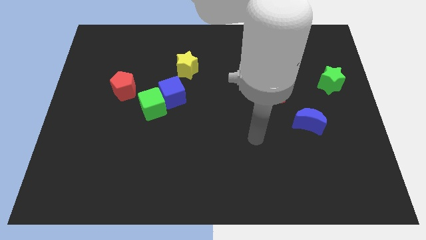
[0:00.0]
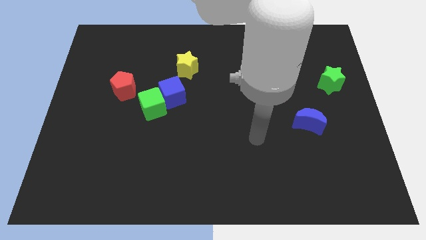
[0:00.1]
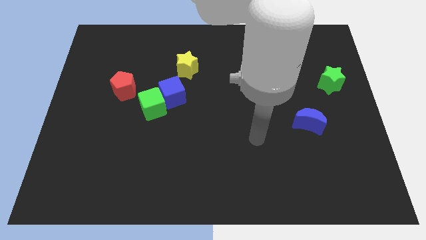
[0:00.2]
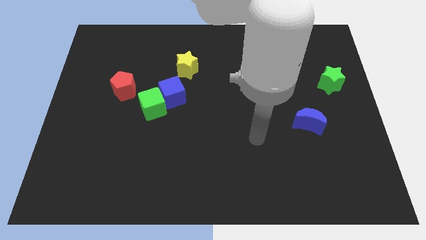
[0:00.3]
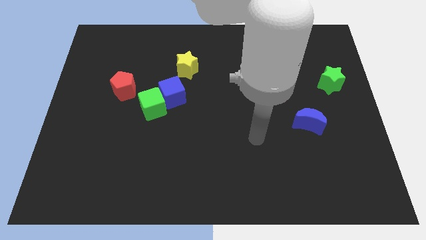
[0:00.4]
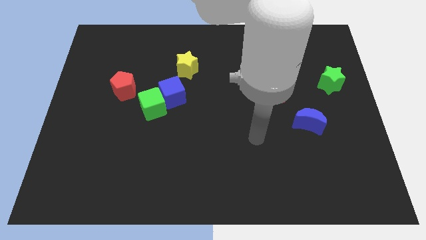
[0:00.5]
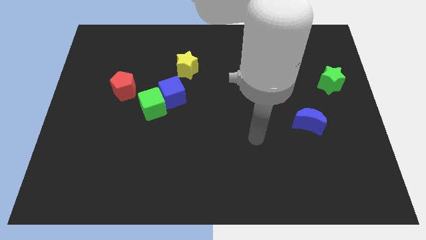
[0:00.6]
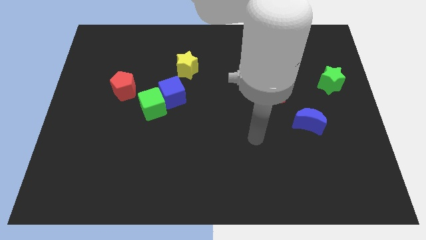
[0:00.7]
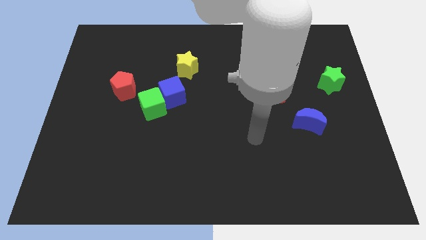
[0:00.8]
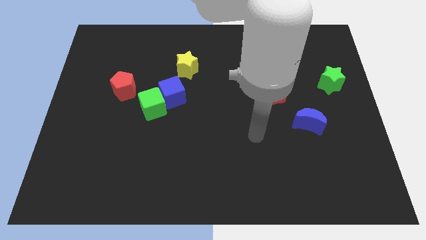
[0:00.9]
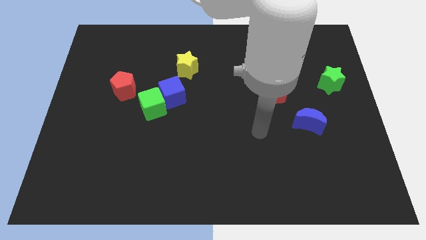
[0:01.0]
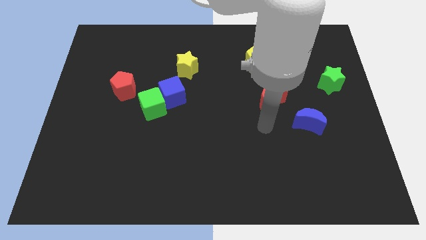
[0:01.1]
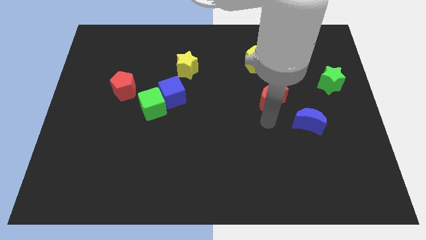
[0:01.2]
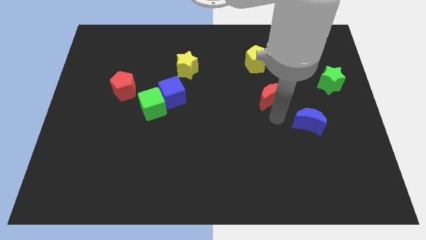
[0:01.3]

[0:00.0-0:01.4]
move your arm towards red crescent

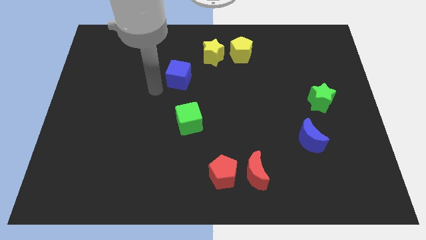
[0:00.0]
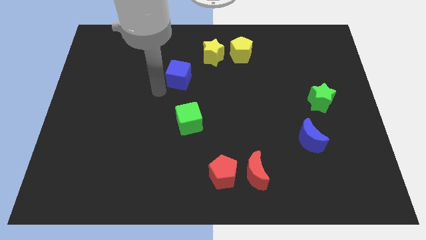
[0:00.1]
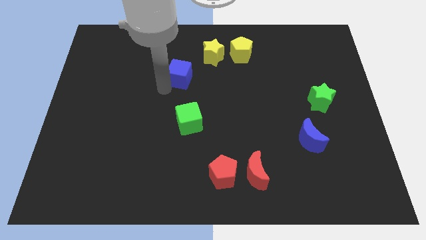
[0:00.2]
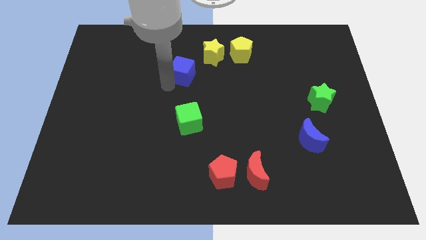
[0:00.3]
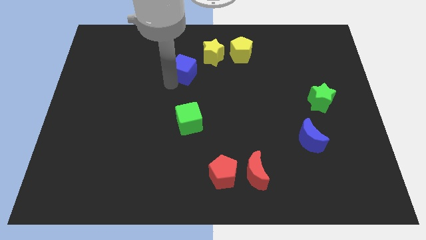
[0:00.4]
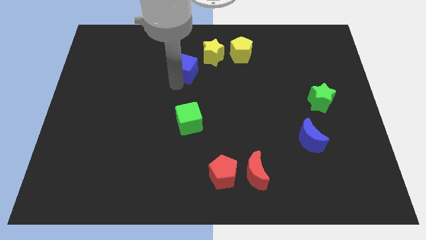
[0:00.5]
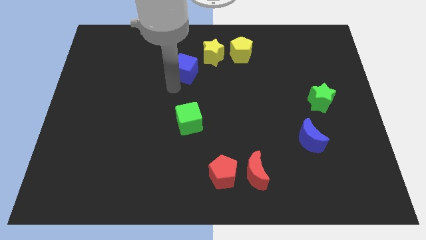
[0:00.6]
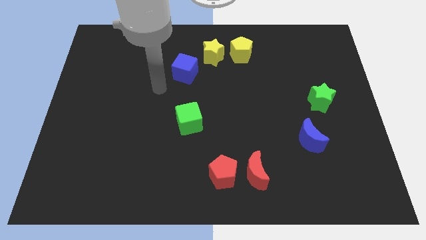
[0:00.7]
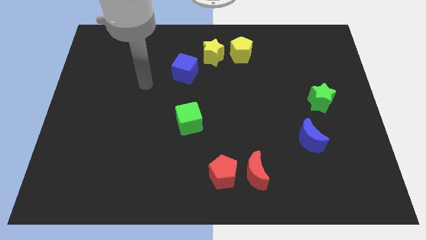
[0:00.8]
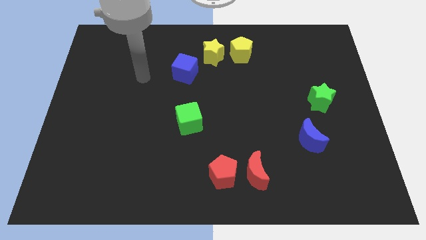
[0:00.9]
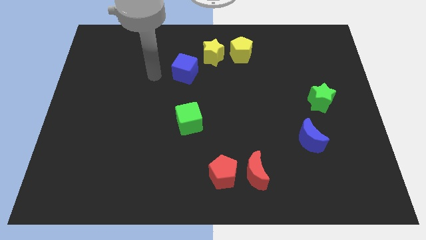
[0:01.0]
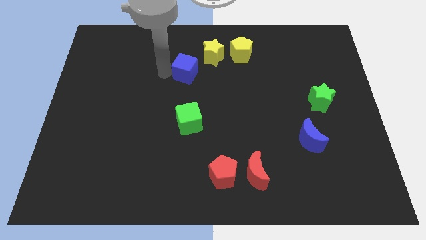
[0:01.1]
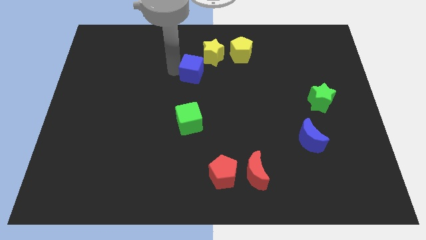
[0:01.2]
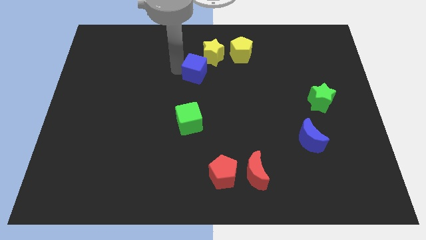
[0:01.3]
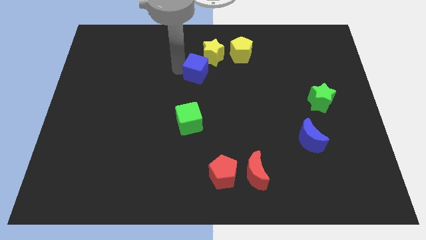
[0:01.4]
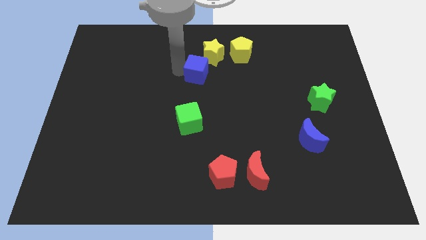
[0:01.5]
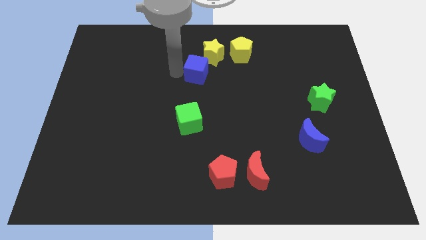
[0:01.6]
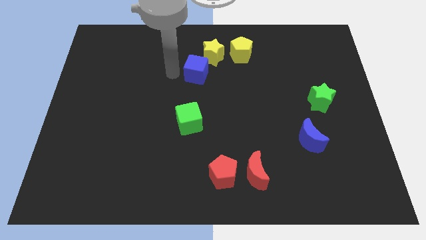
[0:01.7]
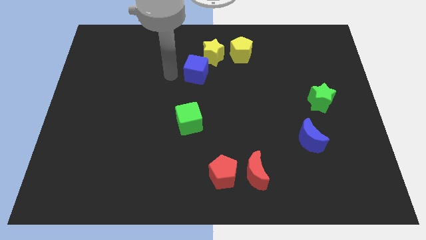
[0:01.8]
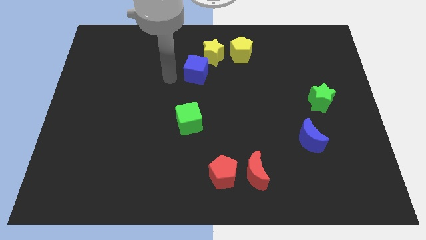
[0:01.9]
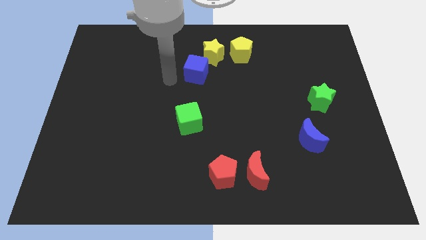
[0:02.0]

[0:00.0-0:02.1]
push blue cube towards yellow star

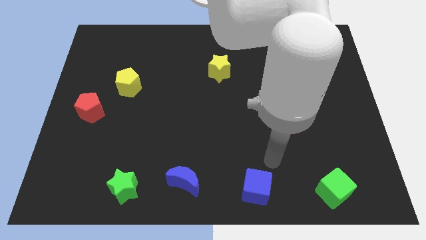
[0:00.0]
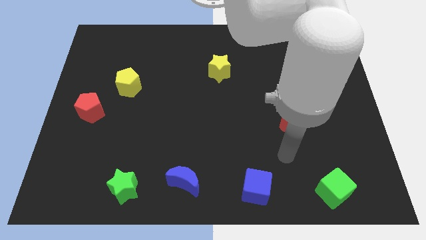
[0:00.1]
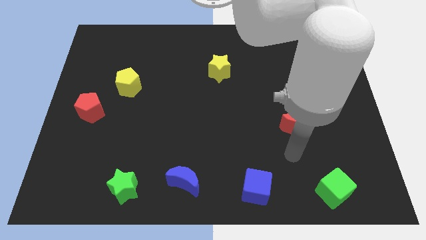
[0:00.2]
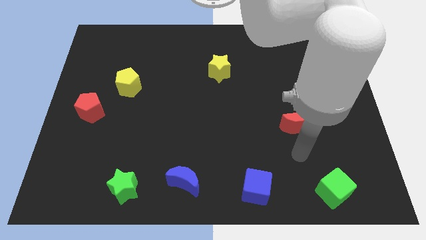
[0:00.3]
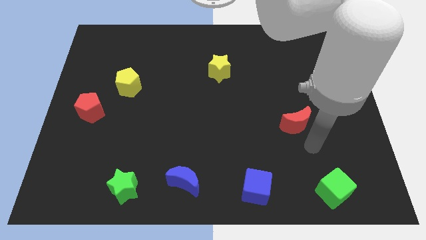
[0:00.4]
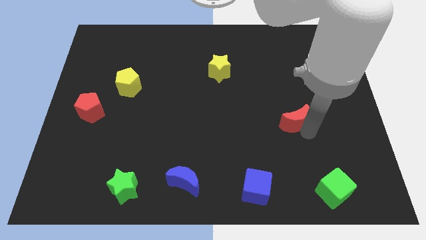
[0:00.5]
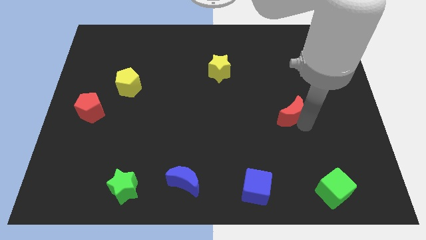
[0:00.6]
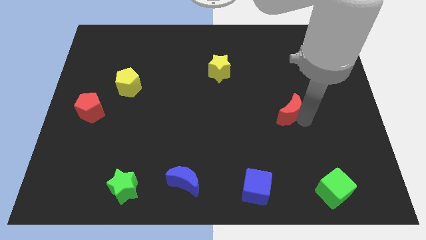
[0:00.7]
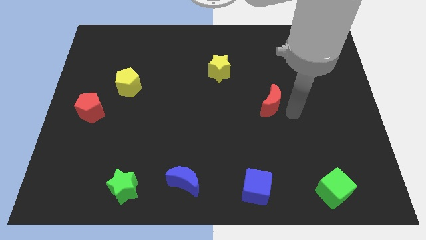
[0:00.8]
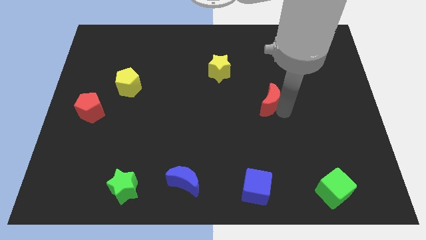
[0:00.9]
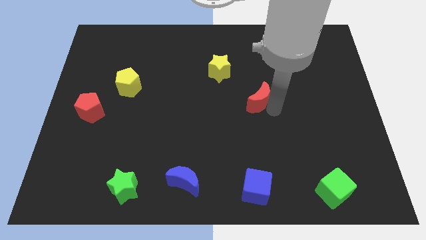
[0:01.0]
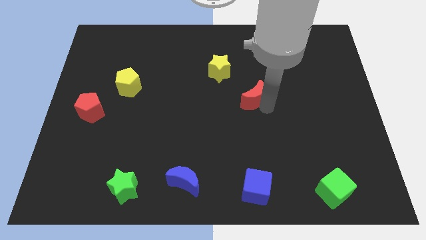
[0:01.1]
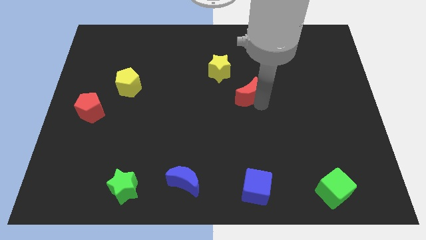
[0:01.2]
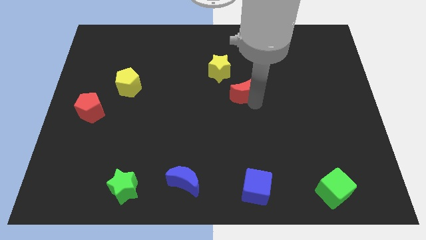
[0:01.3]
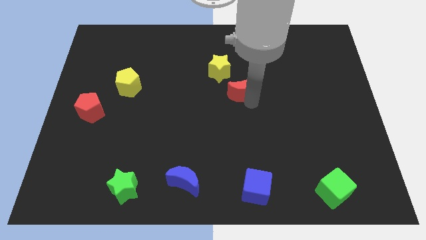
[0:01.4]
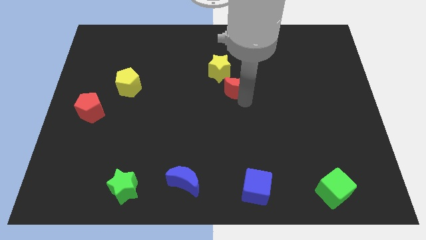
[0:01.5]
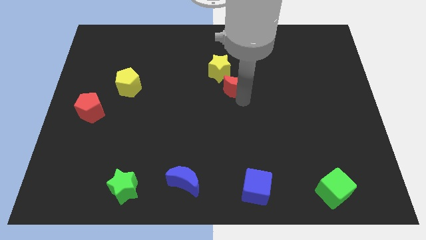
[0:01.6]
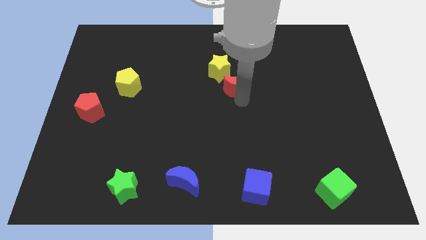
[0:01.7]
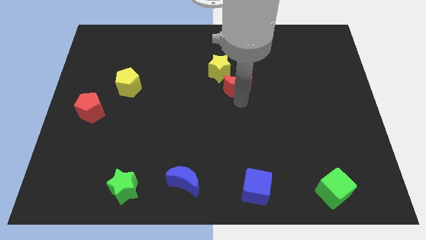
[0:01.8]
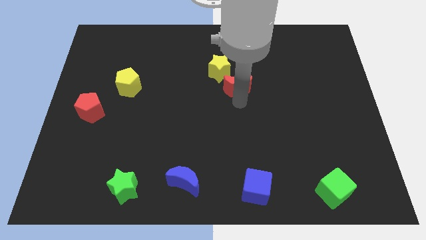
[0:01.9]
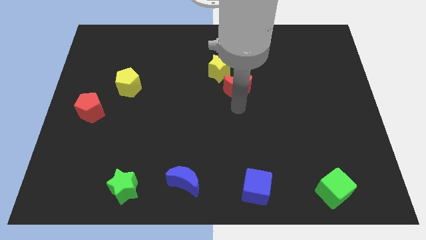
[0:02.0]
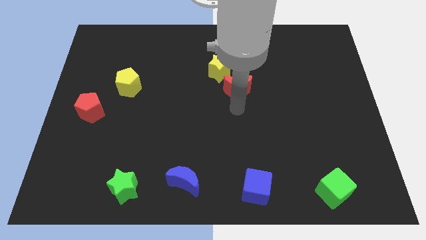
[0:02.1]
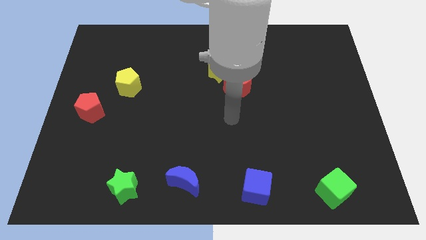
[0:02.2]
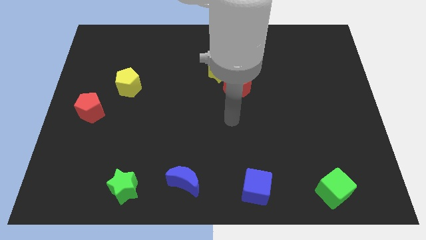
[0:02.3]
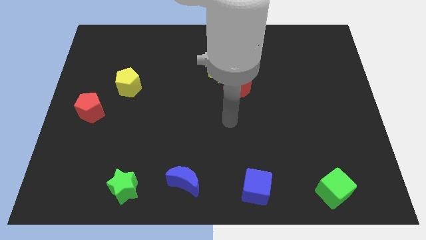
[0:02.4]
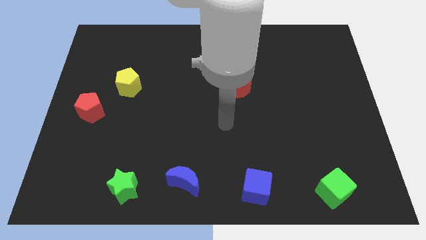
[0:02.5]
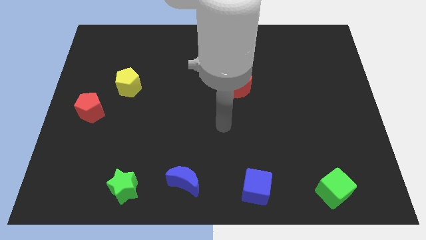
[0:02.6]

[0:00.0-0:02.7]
move the red crescent close to the yellow star

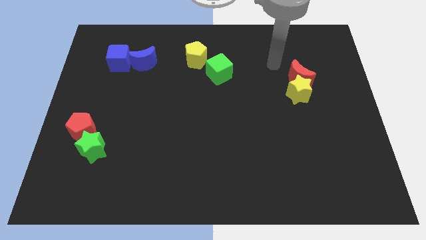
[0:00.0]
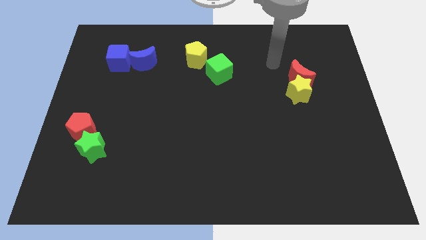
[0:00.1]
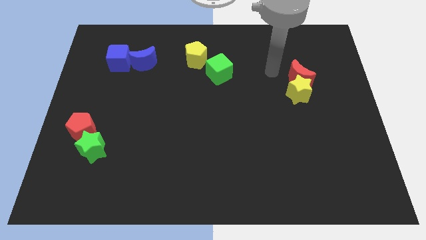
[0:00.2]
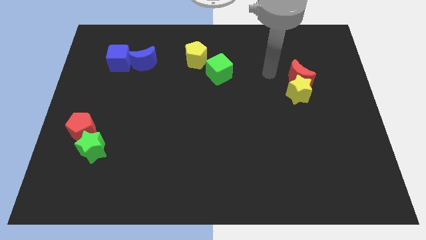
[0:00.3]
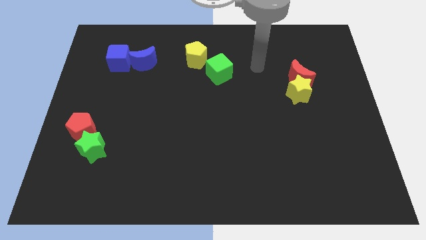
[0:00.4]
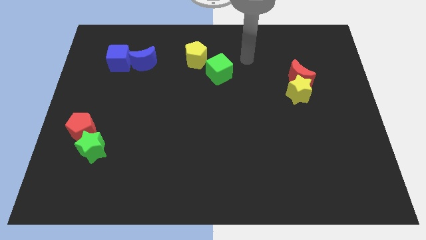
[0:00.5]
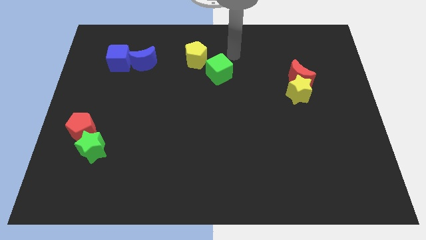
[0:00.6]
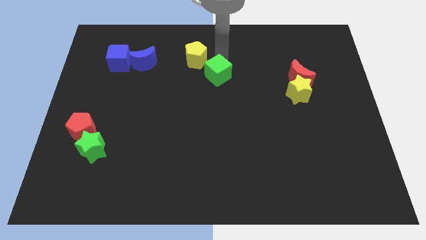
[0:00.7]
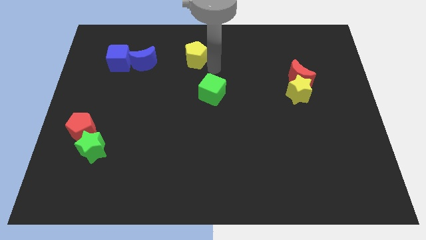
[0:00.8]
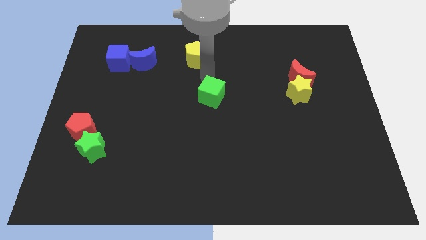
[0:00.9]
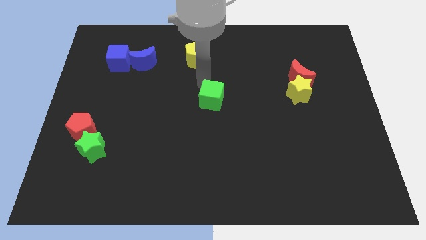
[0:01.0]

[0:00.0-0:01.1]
push the green cube slightly to the bottom

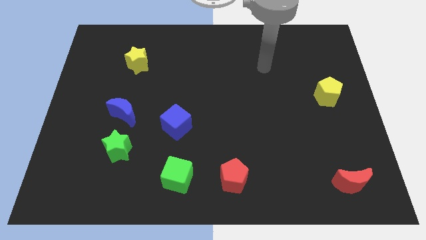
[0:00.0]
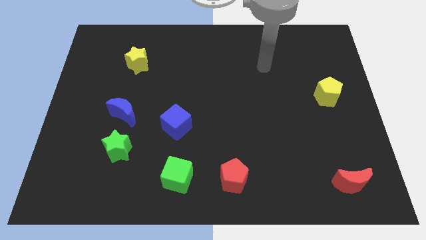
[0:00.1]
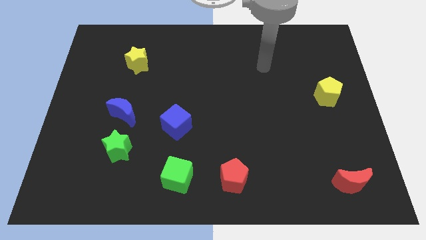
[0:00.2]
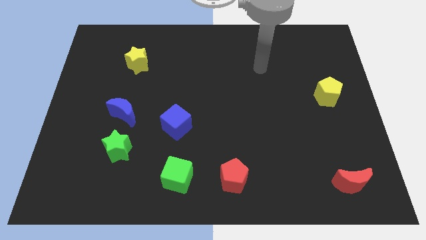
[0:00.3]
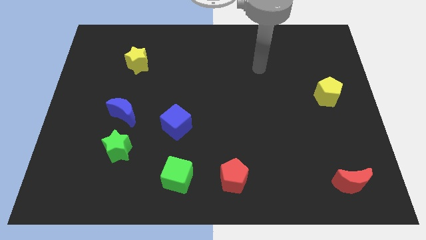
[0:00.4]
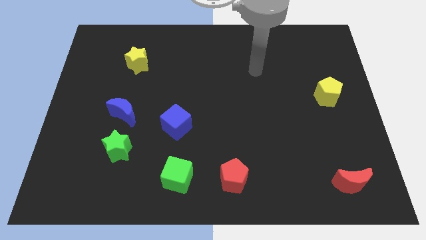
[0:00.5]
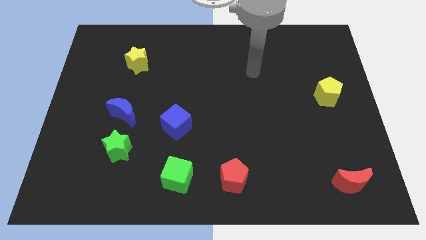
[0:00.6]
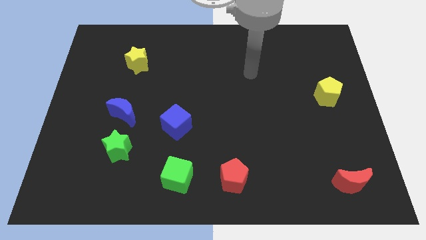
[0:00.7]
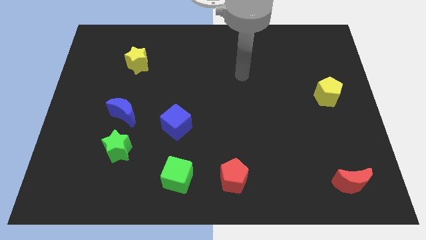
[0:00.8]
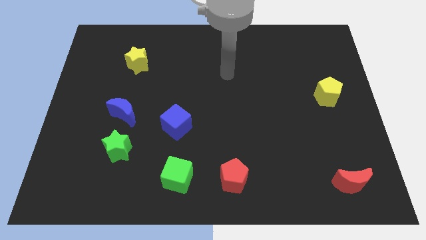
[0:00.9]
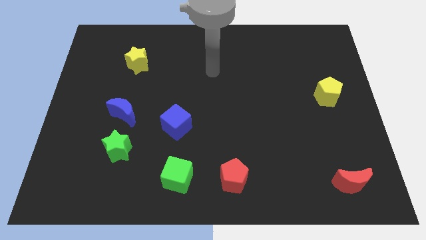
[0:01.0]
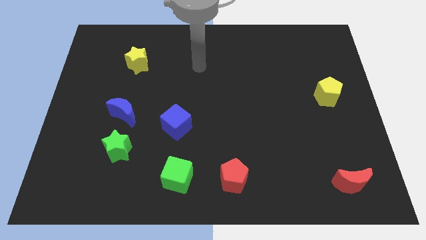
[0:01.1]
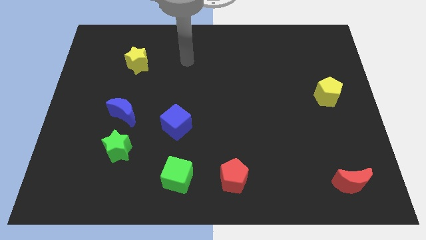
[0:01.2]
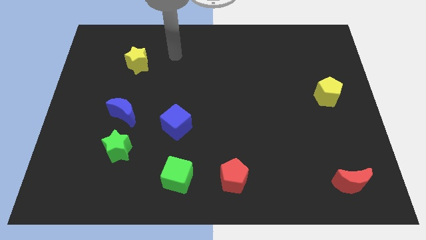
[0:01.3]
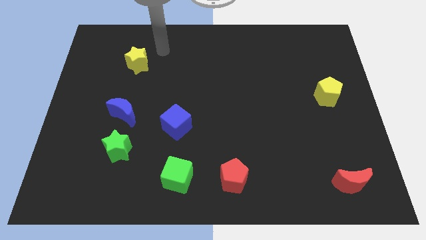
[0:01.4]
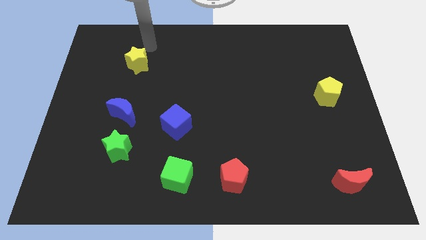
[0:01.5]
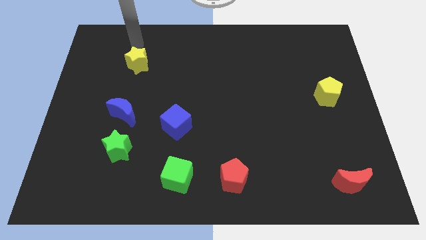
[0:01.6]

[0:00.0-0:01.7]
point your arm at the top side of the yellow star
